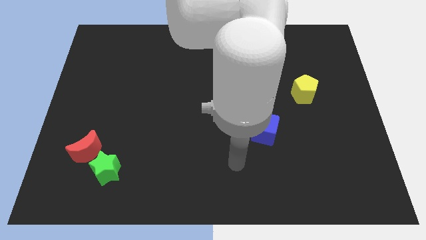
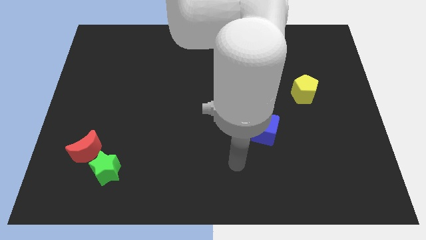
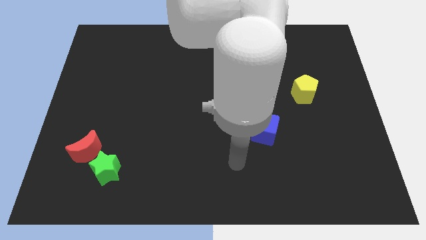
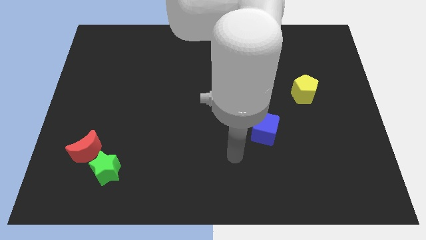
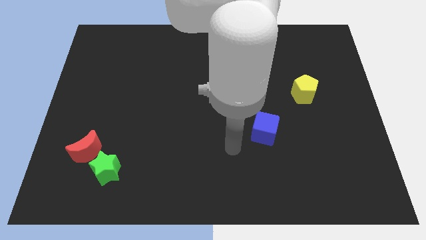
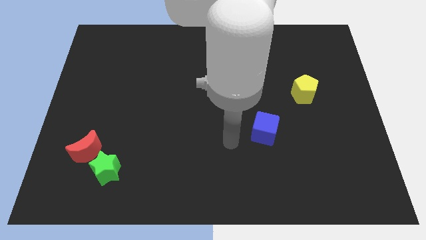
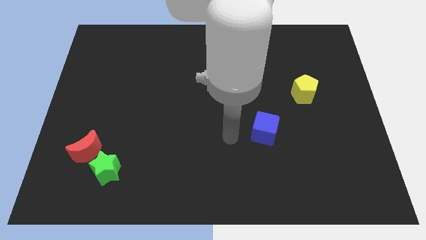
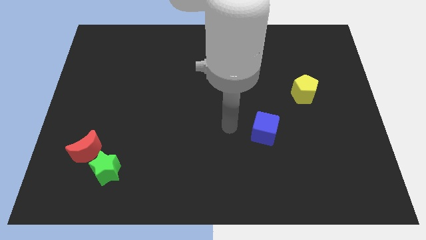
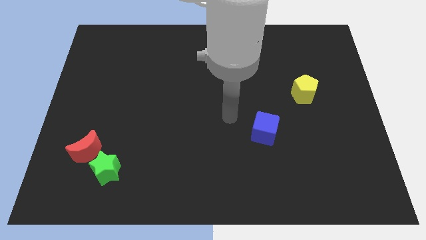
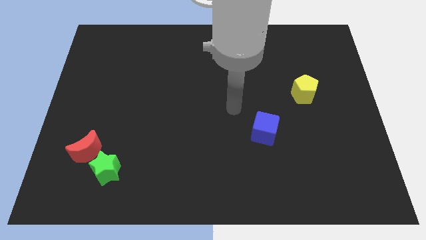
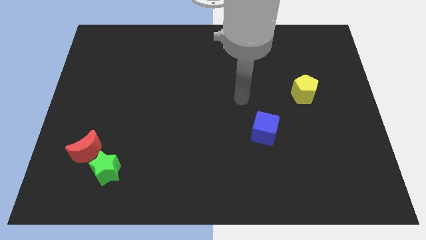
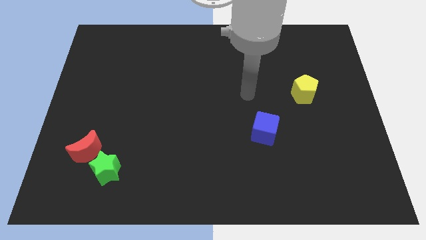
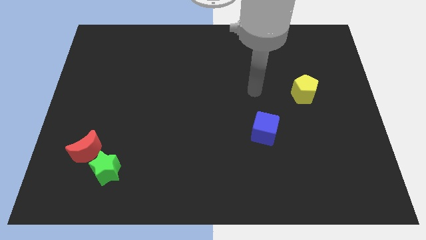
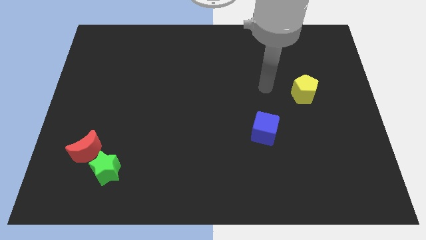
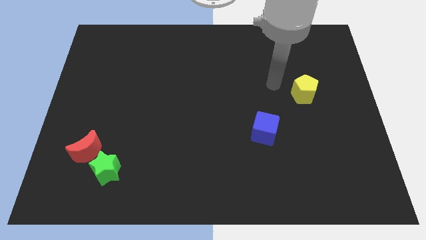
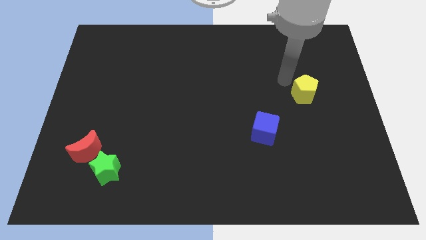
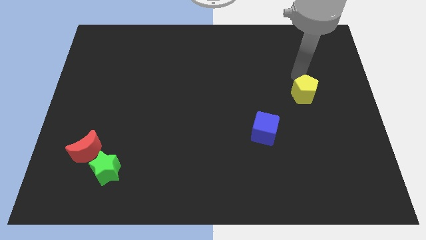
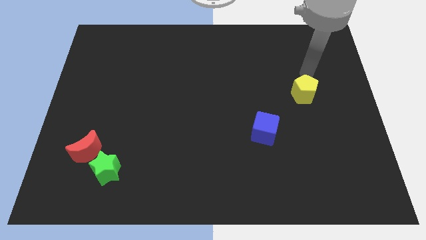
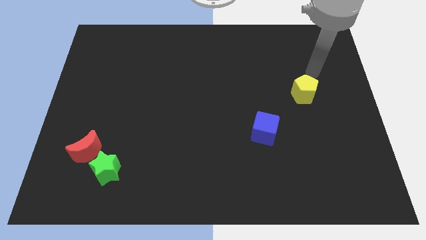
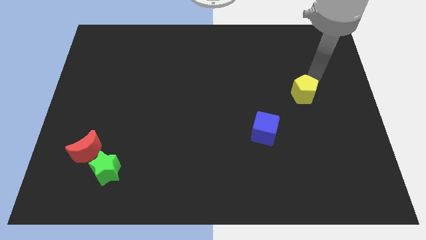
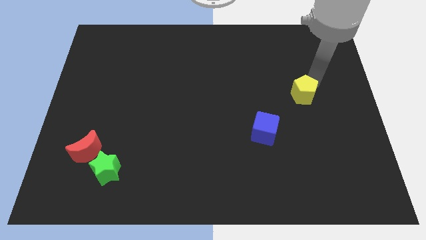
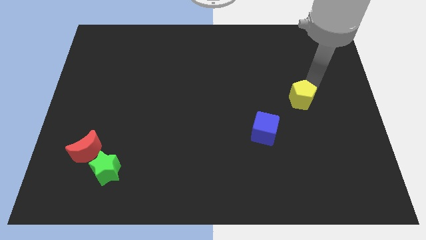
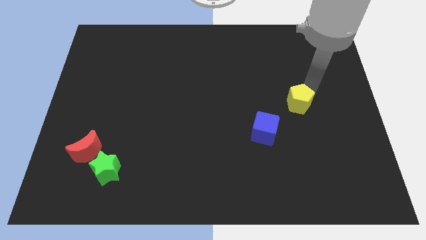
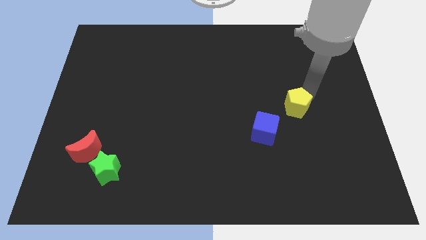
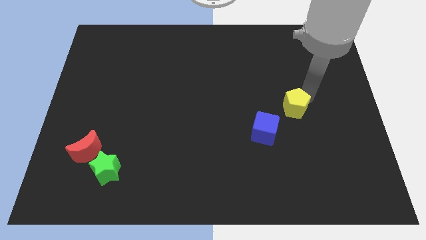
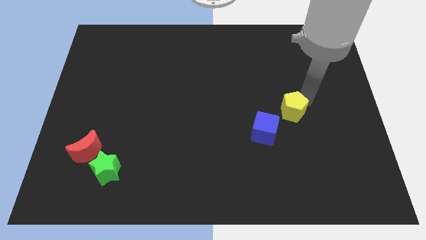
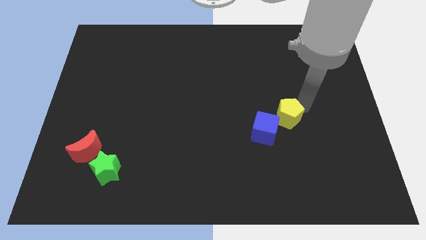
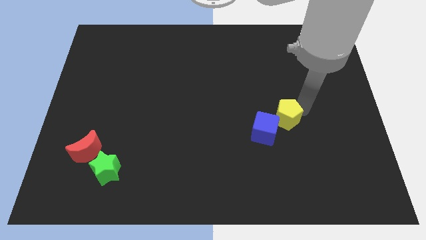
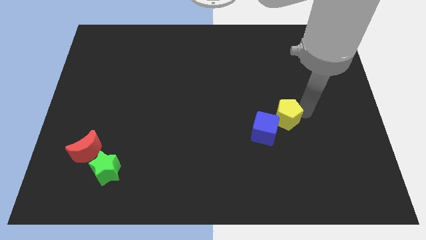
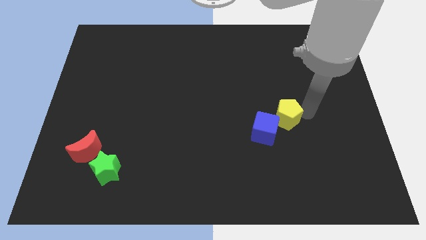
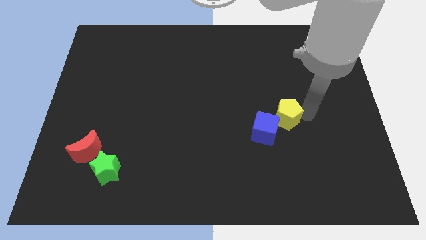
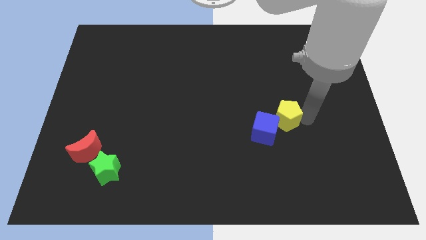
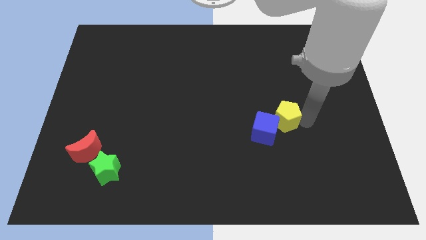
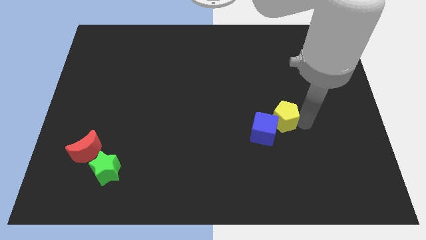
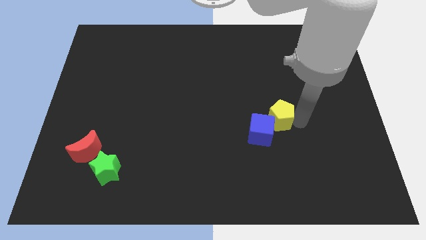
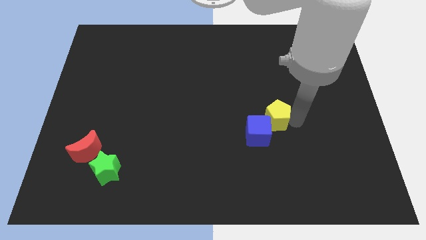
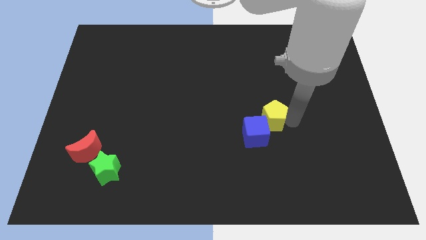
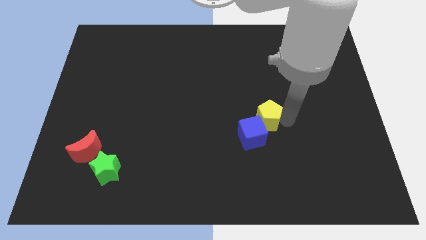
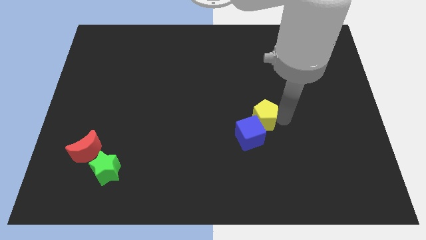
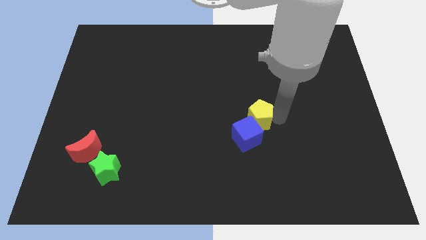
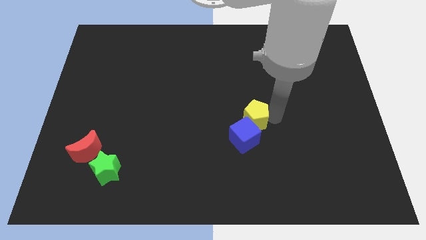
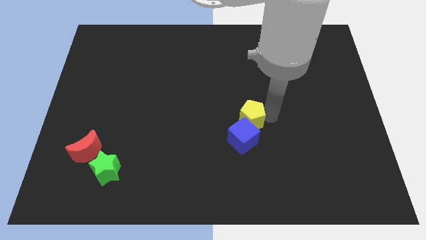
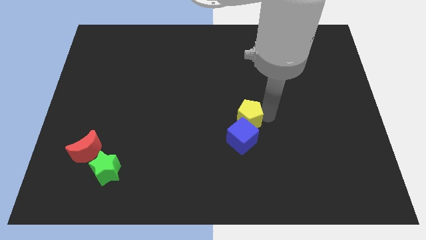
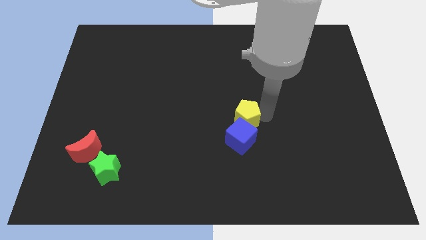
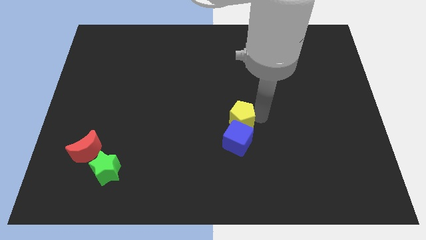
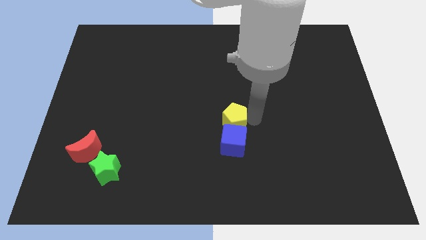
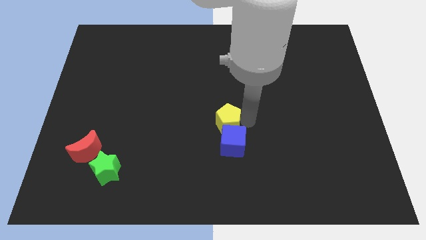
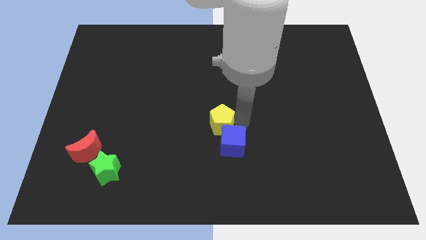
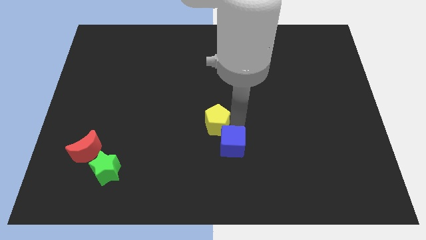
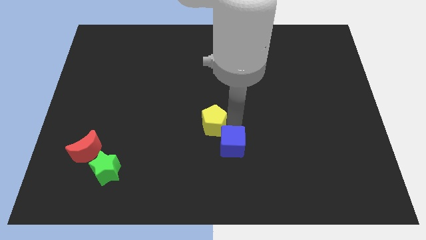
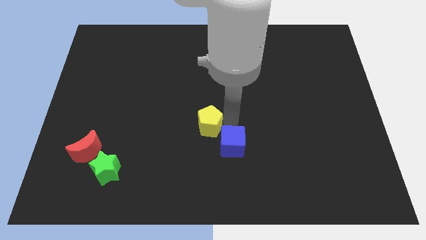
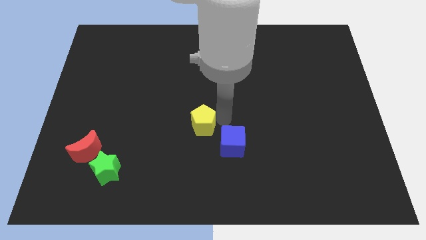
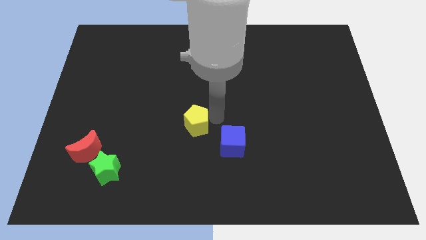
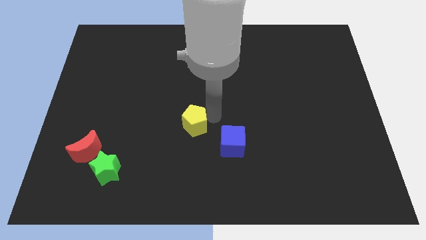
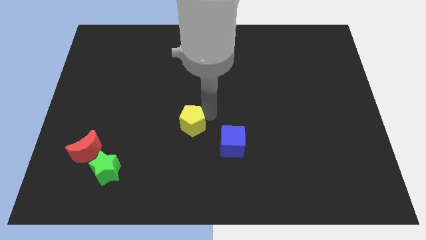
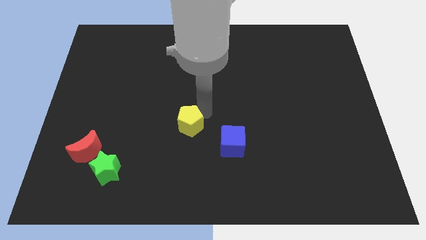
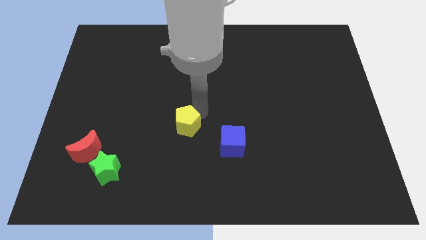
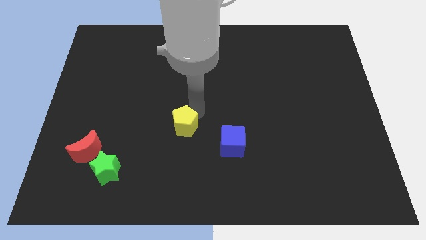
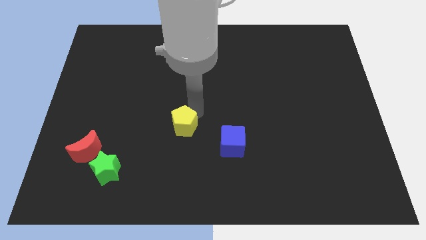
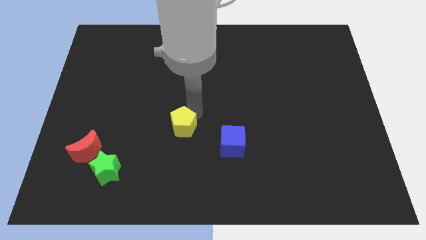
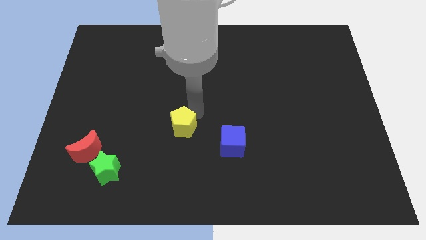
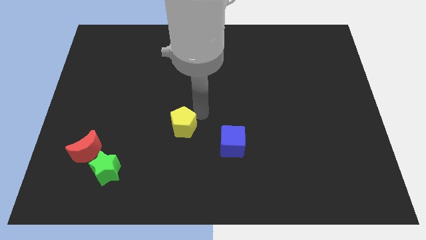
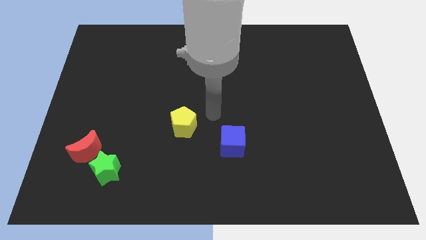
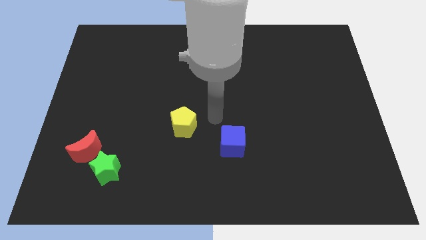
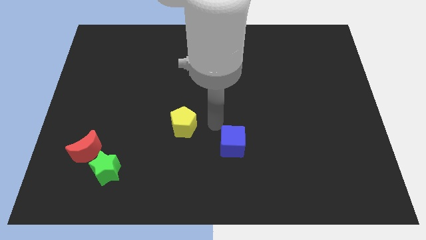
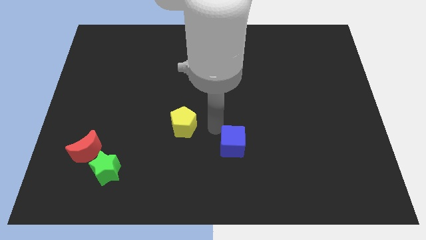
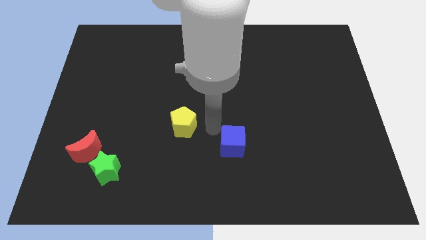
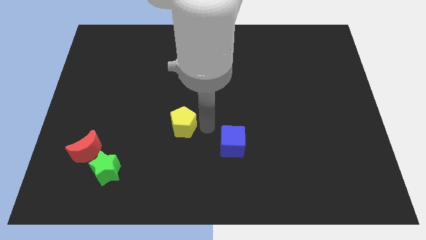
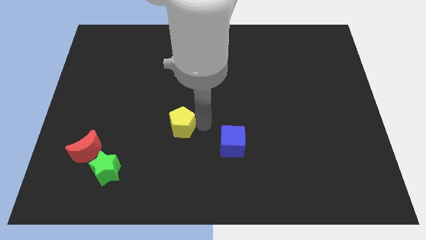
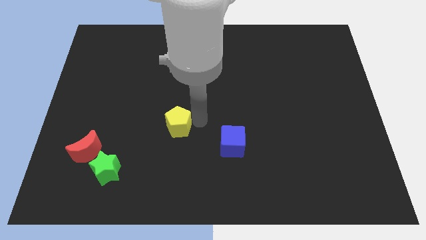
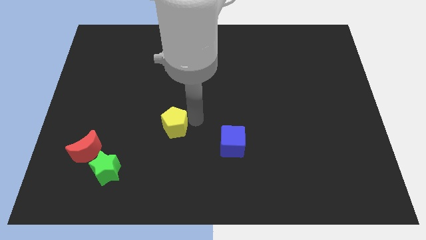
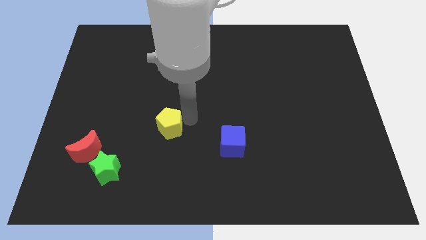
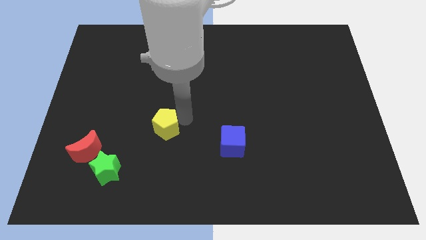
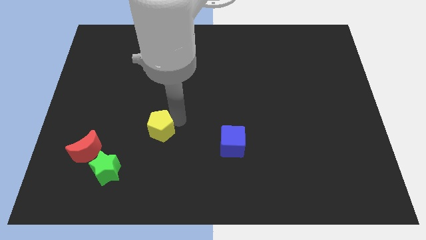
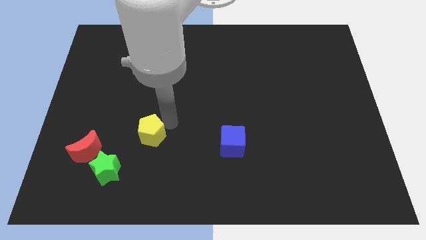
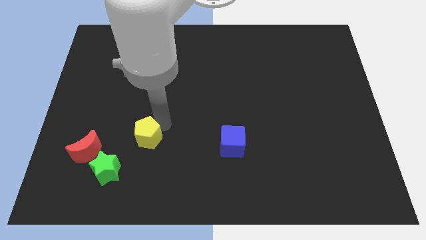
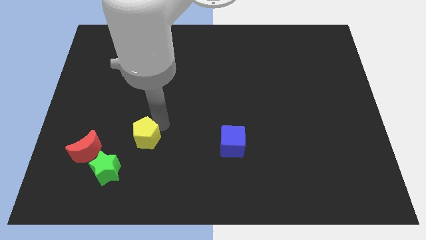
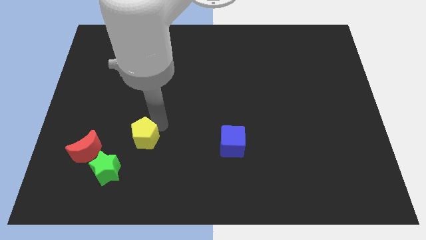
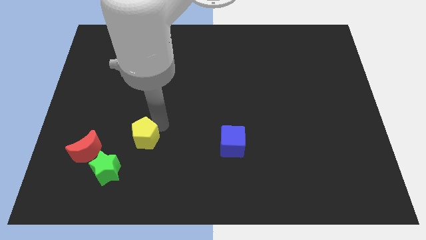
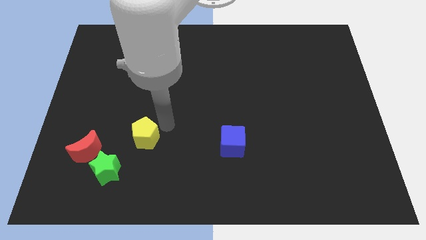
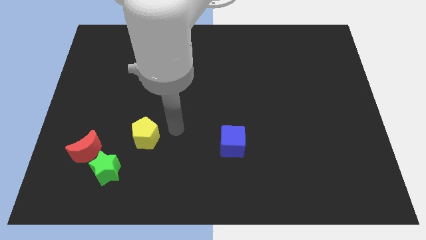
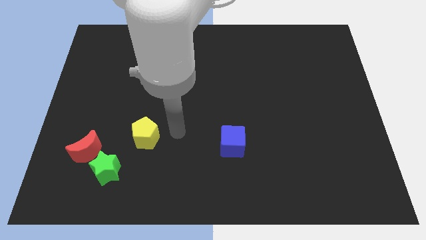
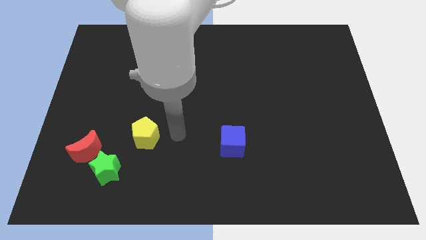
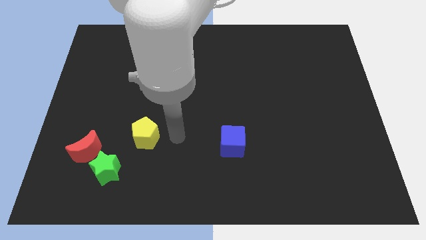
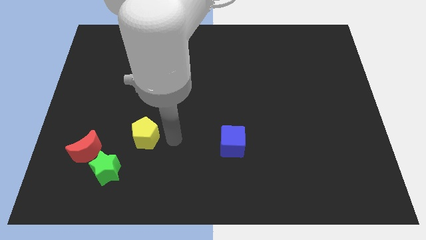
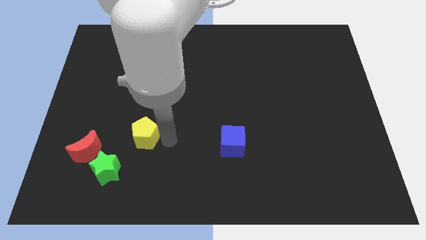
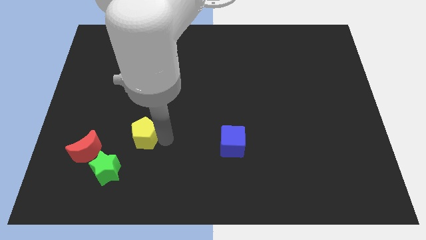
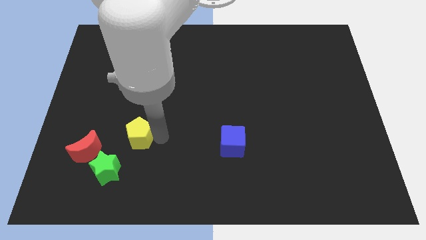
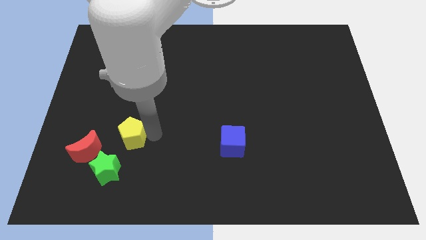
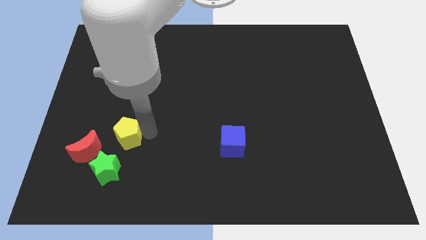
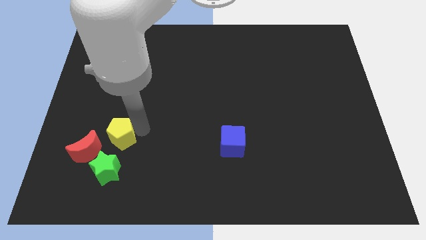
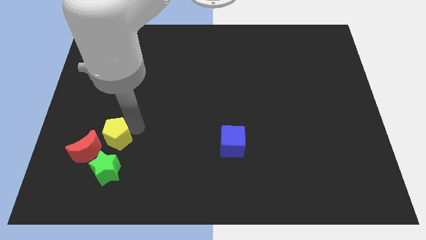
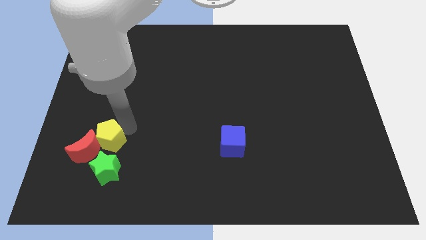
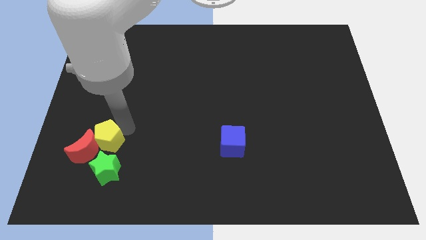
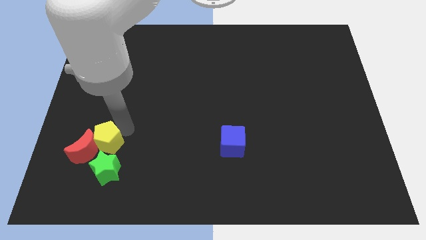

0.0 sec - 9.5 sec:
put the yellow block to the red moon
